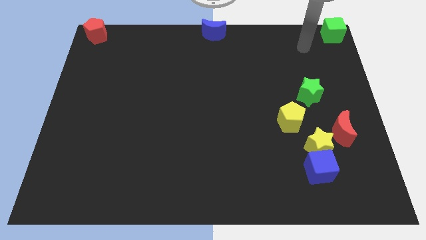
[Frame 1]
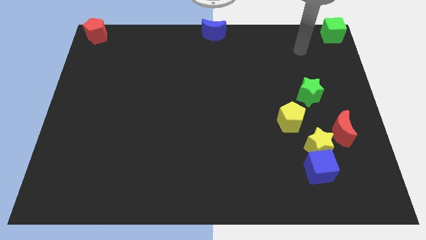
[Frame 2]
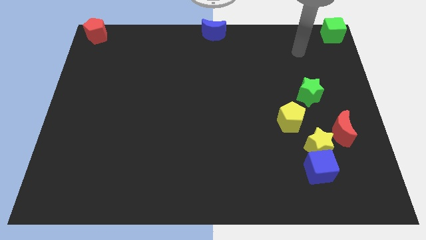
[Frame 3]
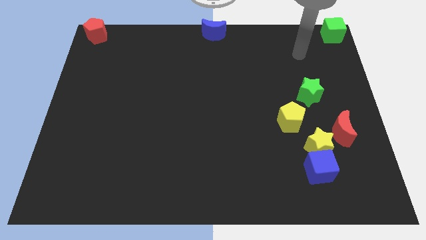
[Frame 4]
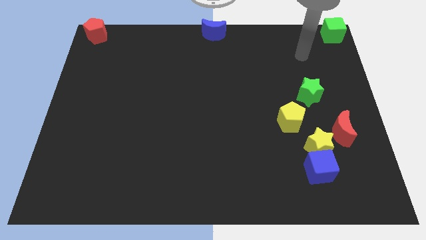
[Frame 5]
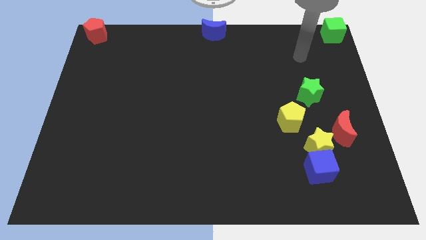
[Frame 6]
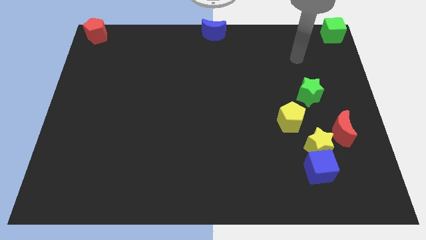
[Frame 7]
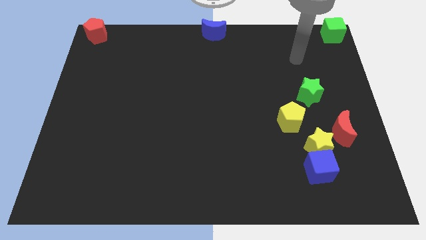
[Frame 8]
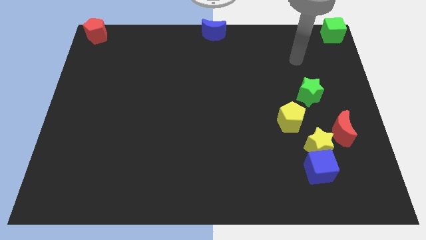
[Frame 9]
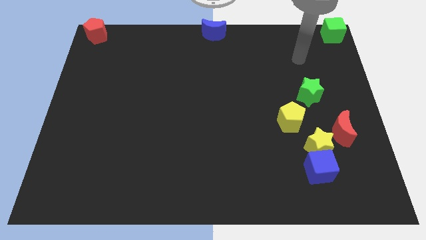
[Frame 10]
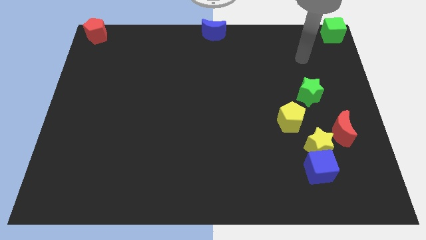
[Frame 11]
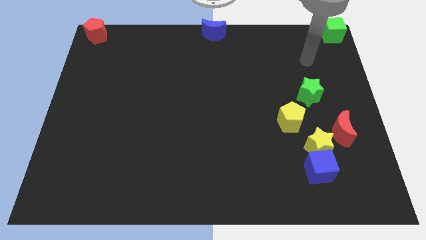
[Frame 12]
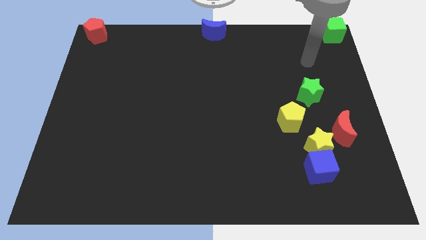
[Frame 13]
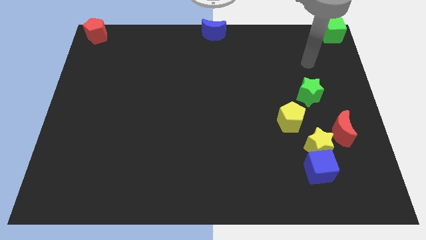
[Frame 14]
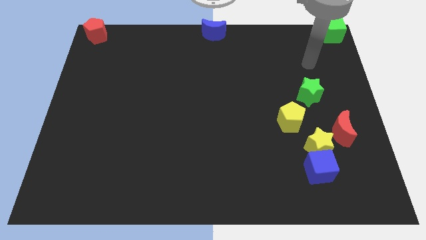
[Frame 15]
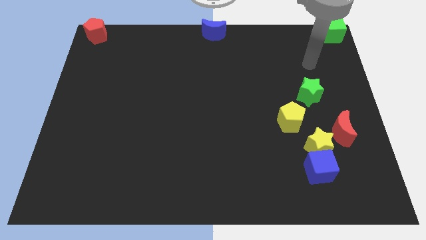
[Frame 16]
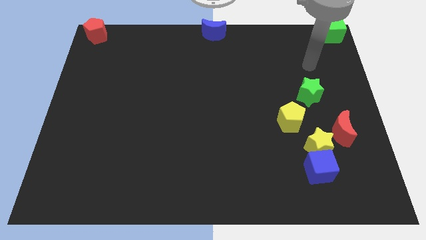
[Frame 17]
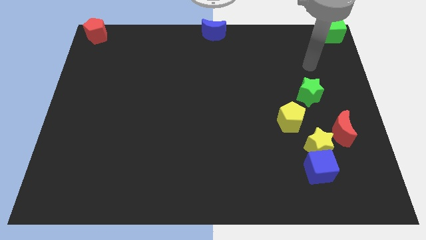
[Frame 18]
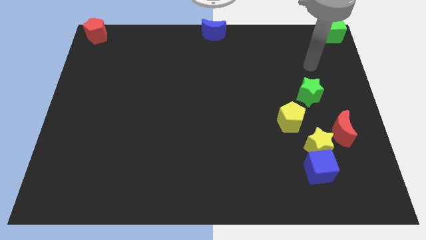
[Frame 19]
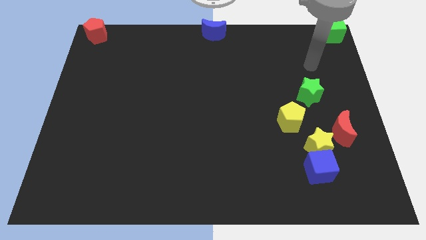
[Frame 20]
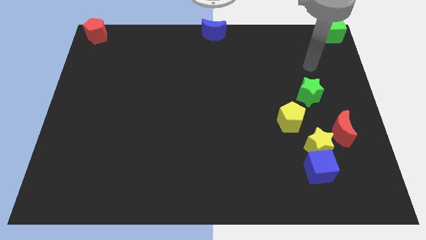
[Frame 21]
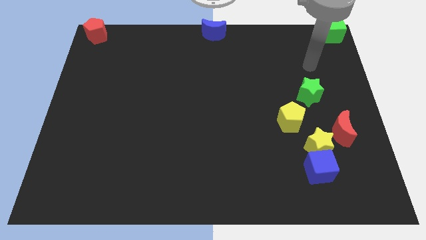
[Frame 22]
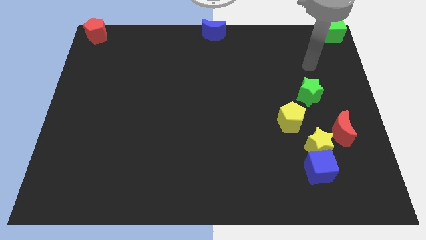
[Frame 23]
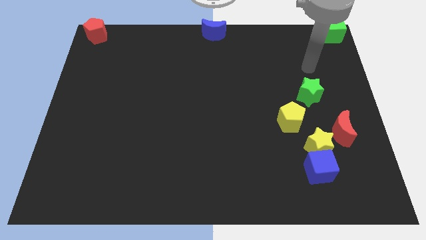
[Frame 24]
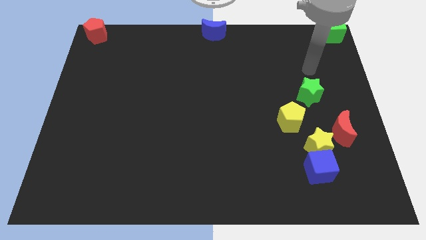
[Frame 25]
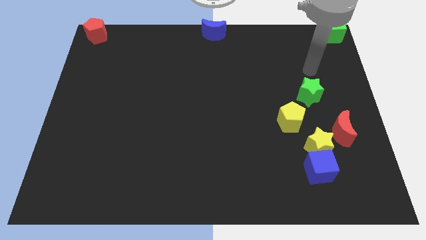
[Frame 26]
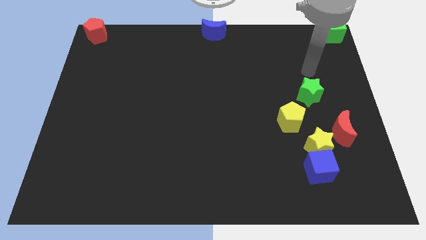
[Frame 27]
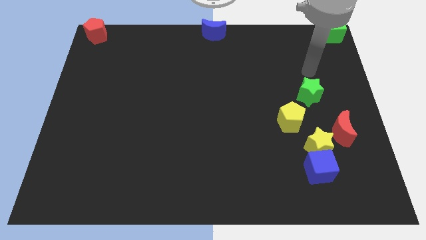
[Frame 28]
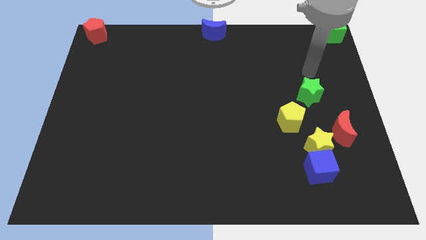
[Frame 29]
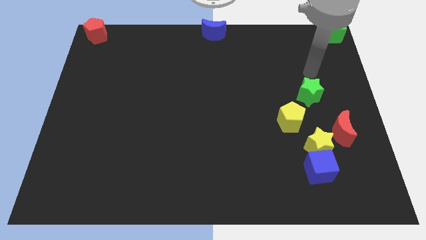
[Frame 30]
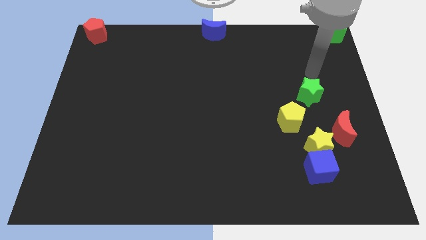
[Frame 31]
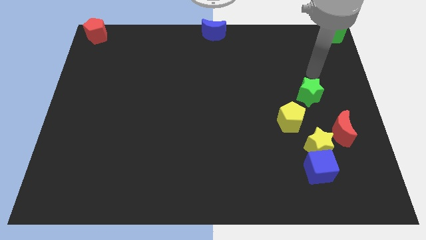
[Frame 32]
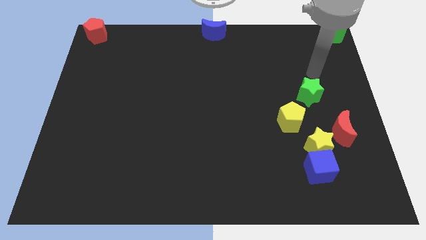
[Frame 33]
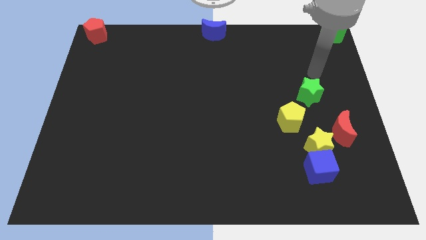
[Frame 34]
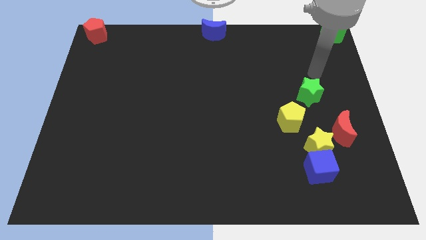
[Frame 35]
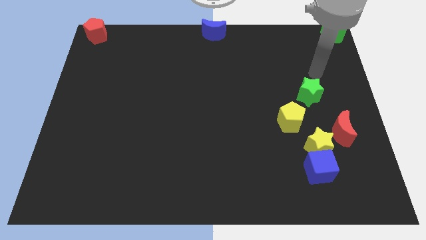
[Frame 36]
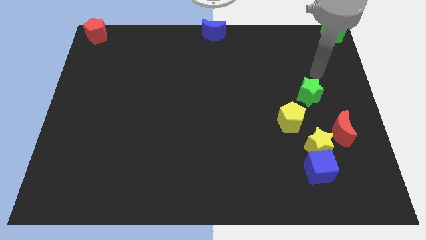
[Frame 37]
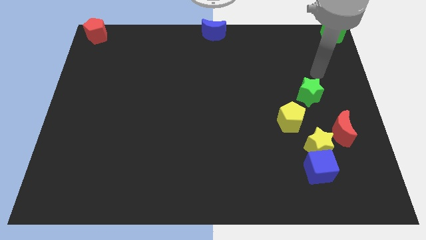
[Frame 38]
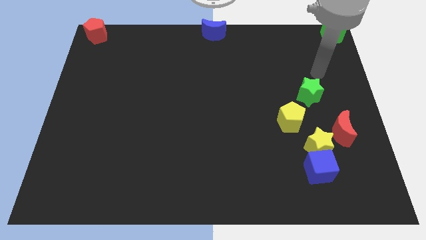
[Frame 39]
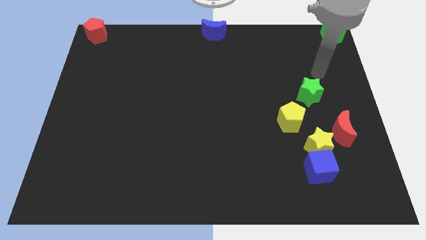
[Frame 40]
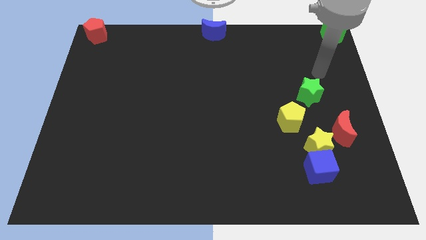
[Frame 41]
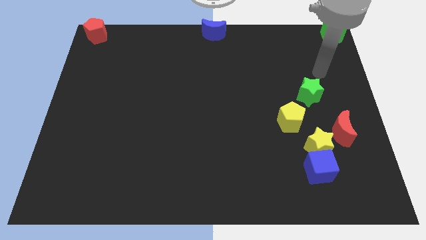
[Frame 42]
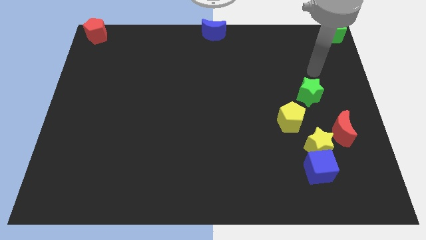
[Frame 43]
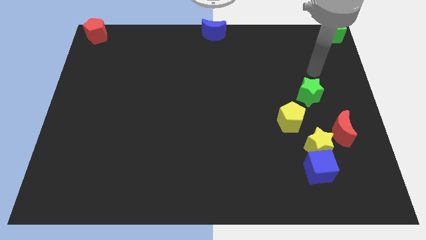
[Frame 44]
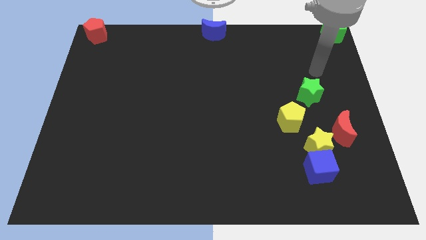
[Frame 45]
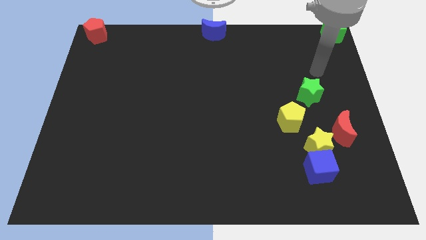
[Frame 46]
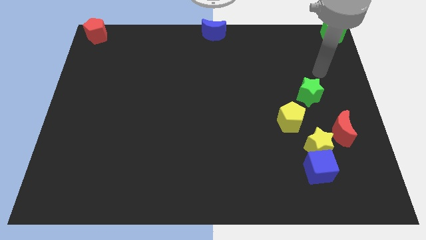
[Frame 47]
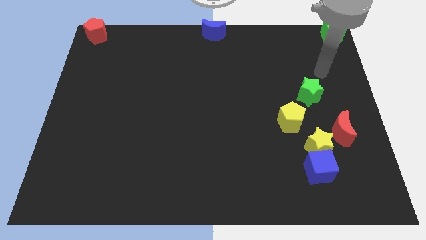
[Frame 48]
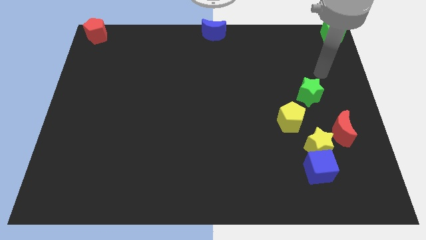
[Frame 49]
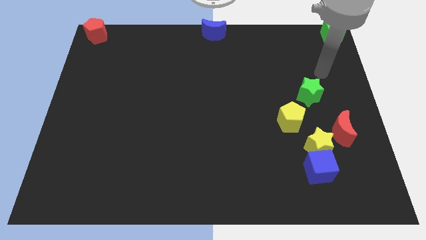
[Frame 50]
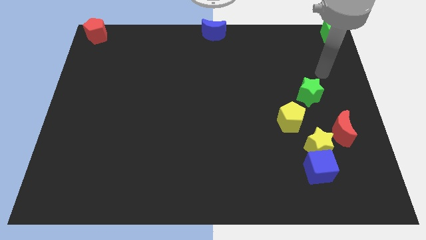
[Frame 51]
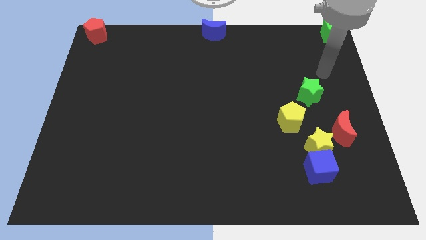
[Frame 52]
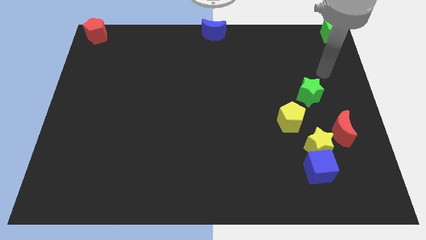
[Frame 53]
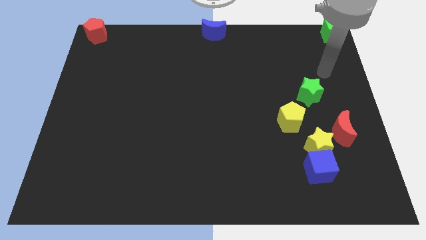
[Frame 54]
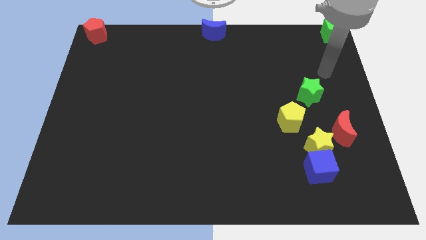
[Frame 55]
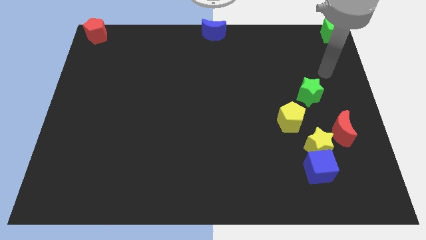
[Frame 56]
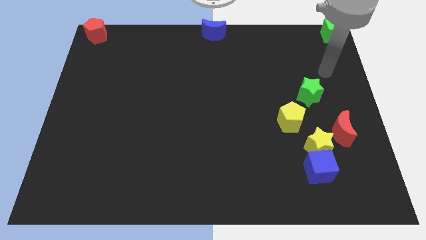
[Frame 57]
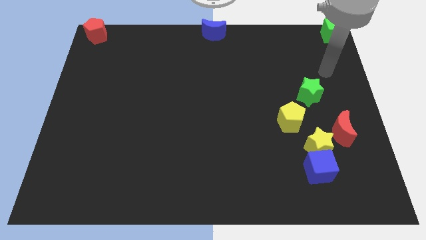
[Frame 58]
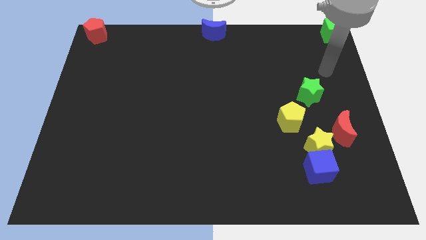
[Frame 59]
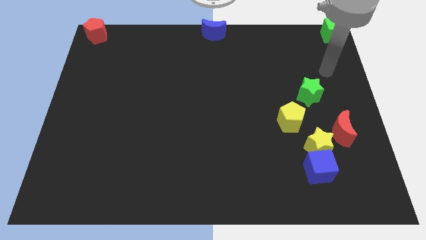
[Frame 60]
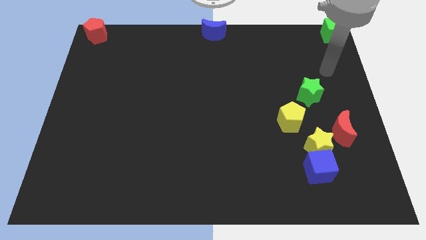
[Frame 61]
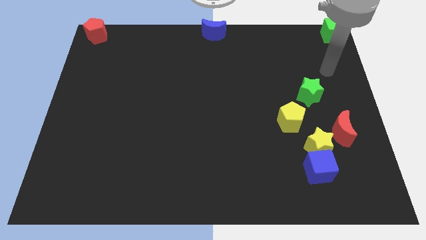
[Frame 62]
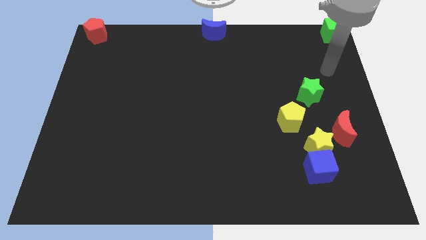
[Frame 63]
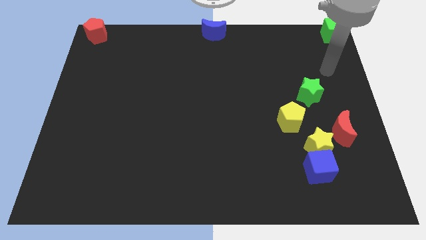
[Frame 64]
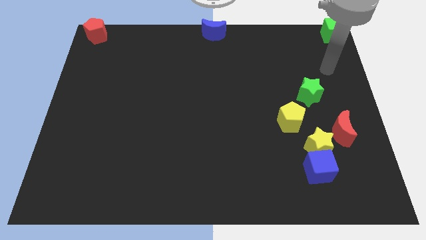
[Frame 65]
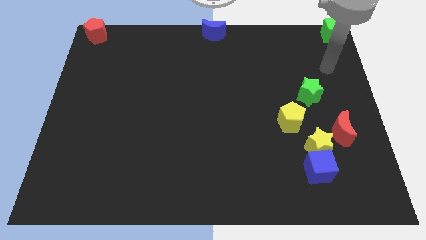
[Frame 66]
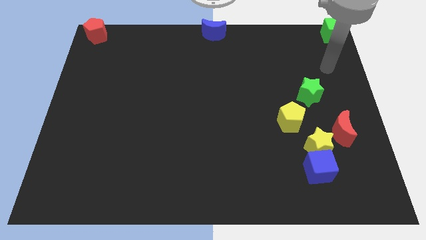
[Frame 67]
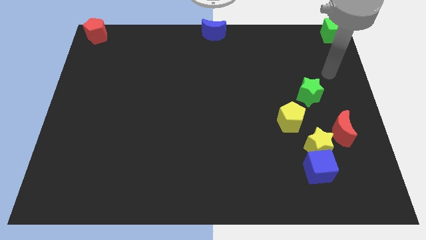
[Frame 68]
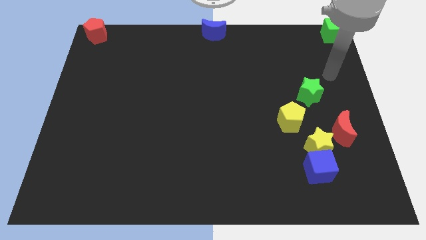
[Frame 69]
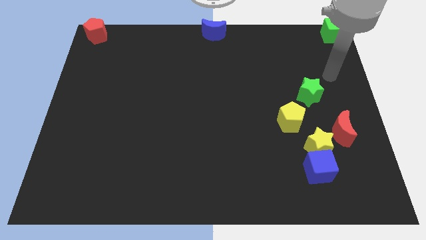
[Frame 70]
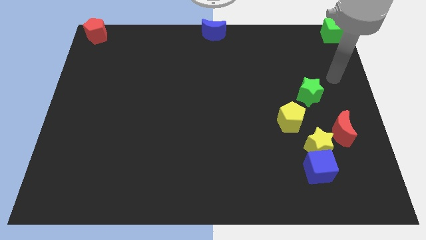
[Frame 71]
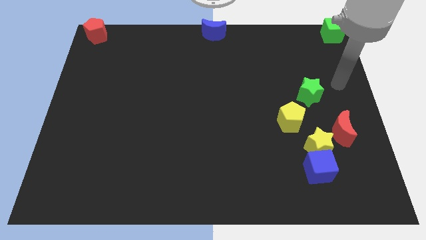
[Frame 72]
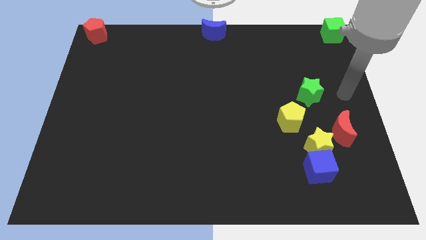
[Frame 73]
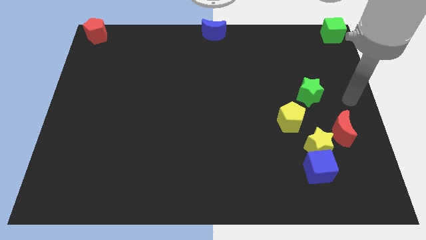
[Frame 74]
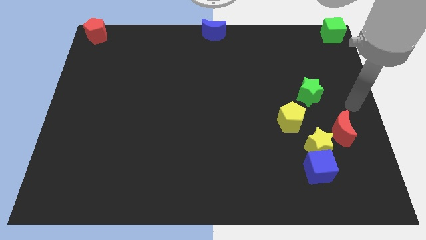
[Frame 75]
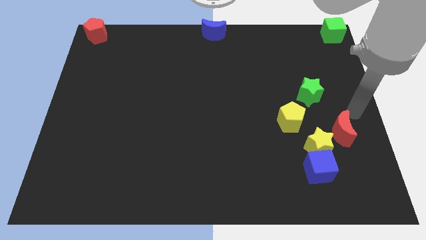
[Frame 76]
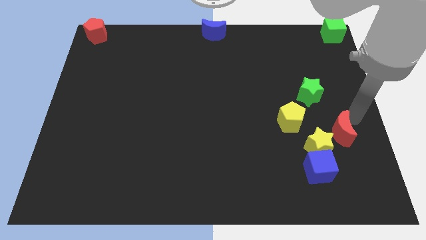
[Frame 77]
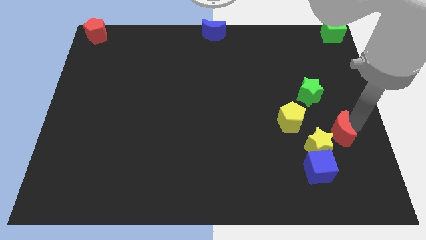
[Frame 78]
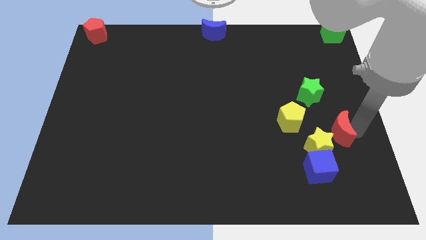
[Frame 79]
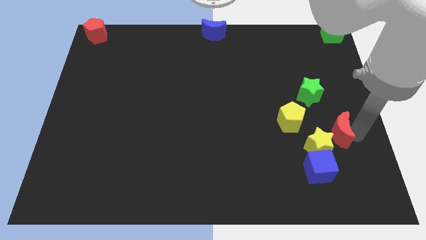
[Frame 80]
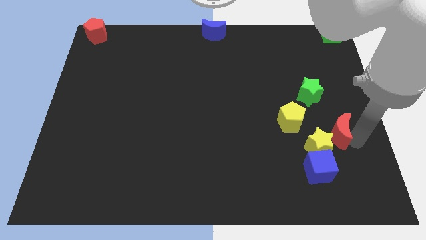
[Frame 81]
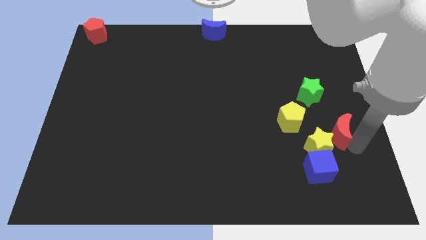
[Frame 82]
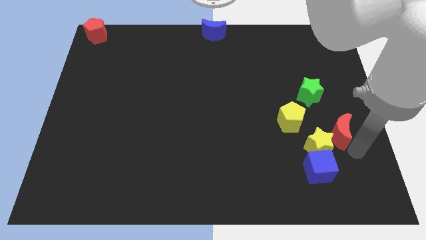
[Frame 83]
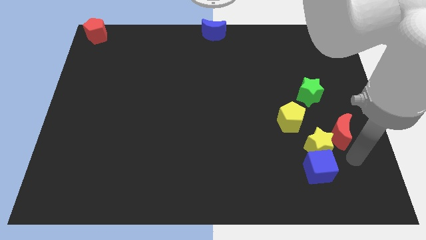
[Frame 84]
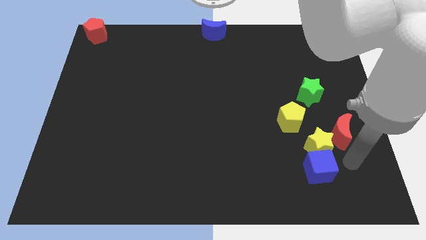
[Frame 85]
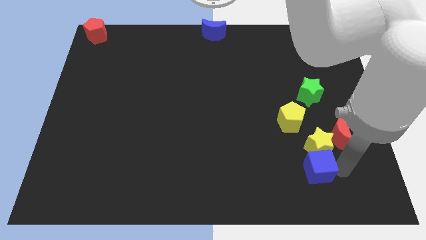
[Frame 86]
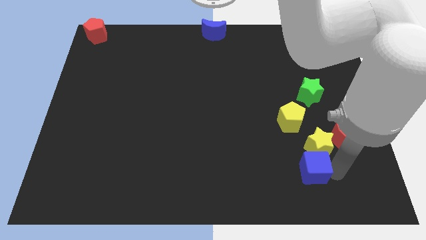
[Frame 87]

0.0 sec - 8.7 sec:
move your arm towards the blue cube

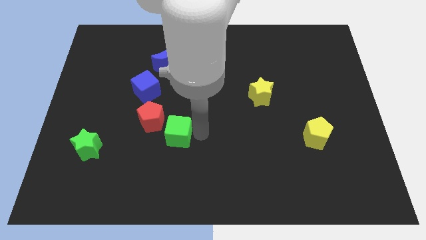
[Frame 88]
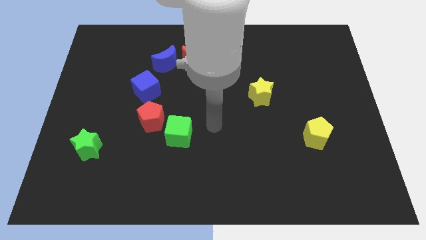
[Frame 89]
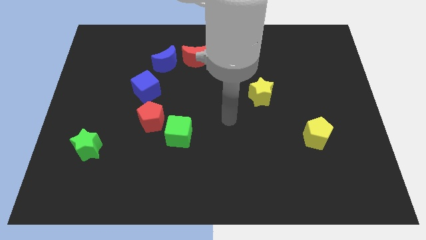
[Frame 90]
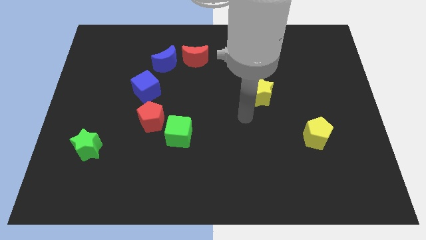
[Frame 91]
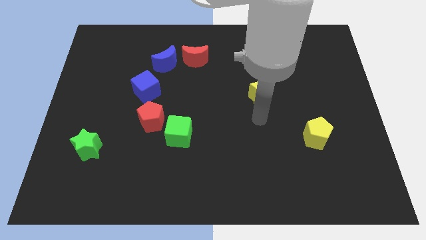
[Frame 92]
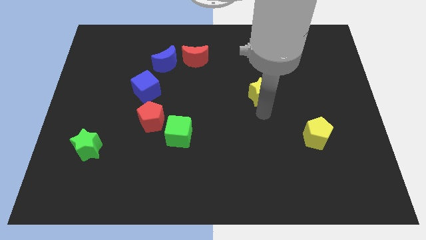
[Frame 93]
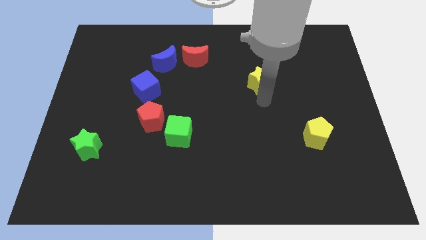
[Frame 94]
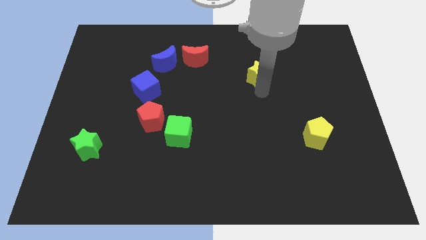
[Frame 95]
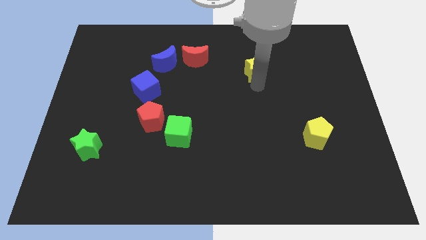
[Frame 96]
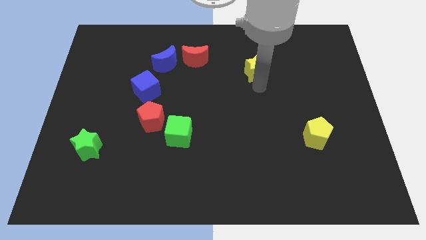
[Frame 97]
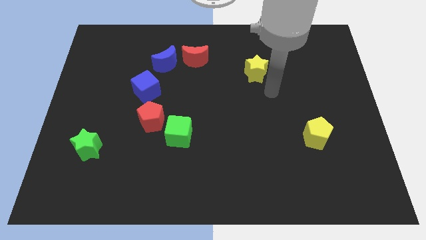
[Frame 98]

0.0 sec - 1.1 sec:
push the yellow star slightly to the top
